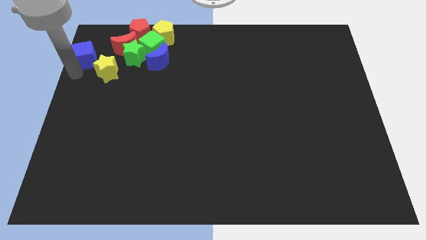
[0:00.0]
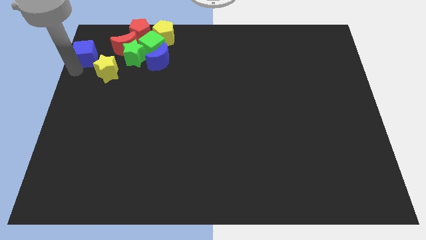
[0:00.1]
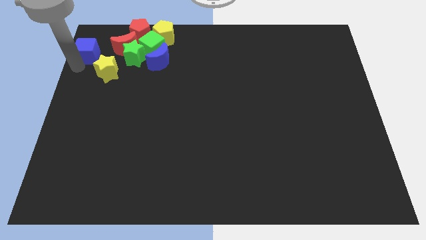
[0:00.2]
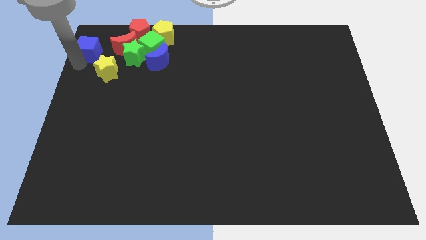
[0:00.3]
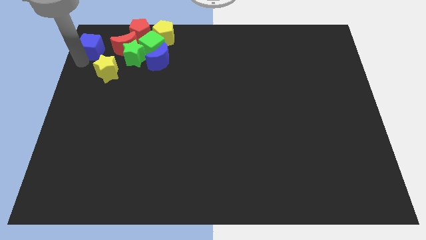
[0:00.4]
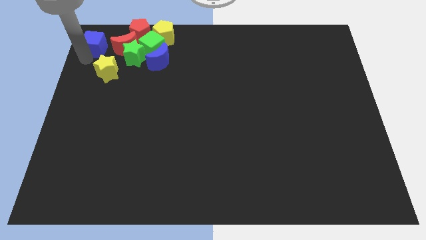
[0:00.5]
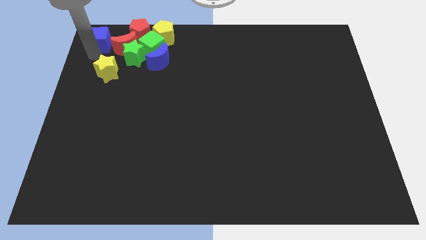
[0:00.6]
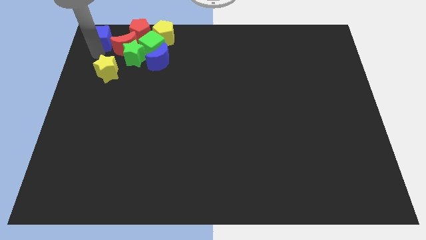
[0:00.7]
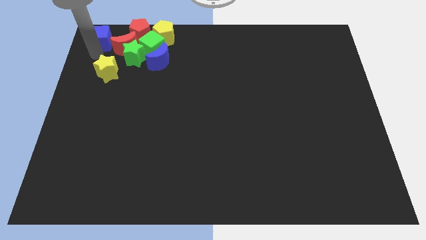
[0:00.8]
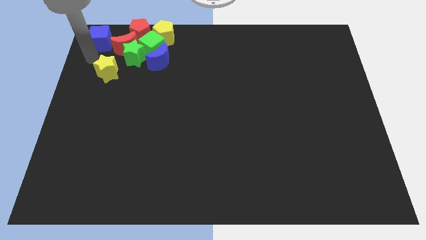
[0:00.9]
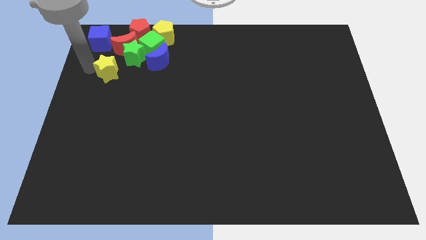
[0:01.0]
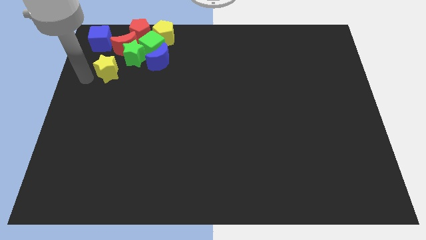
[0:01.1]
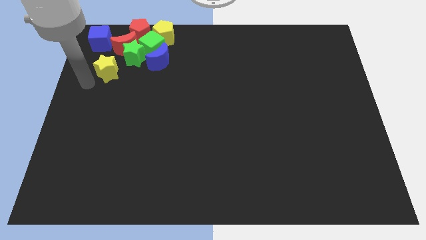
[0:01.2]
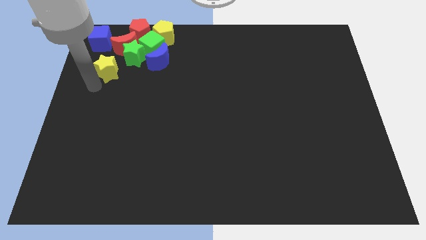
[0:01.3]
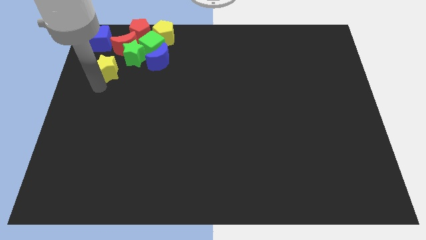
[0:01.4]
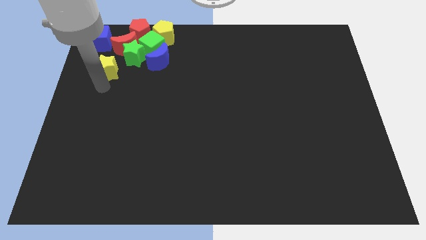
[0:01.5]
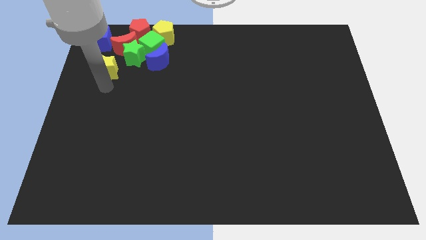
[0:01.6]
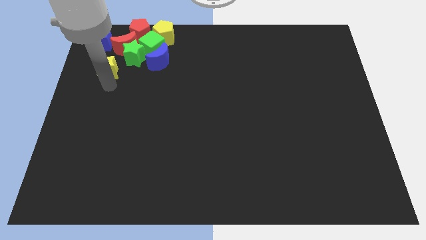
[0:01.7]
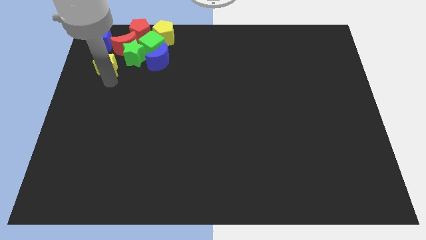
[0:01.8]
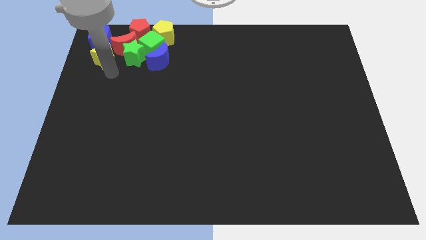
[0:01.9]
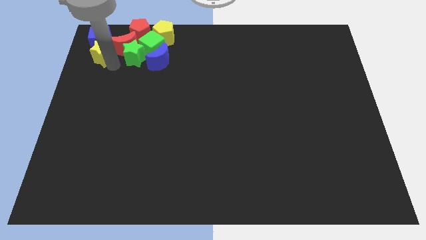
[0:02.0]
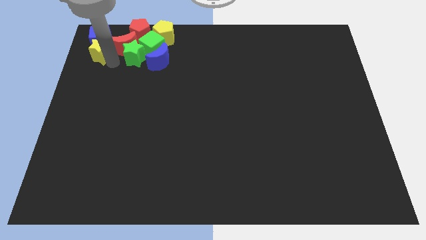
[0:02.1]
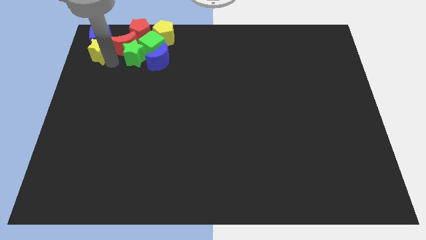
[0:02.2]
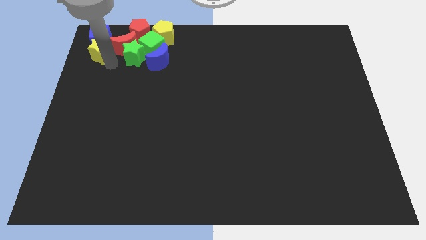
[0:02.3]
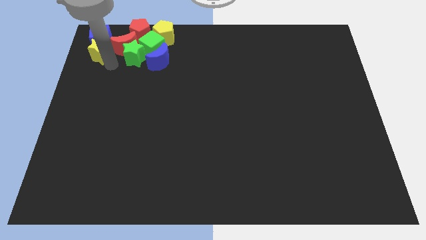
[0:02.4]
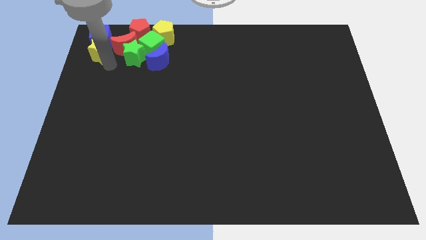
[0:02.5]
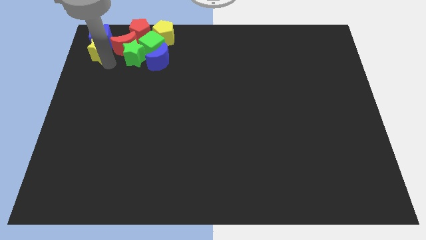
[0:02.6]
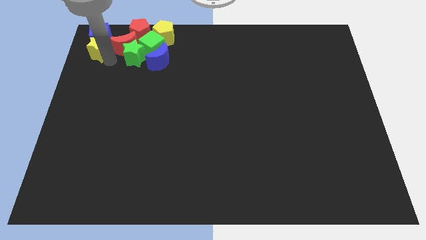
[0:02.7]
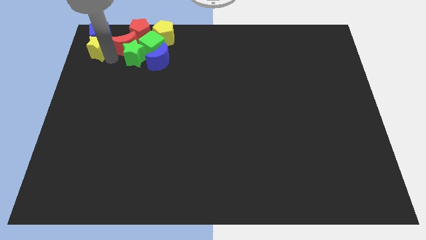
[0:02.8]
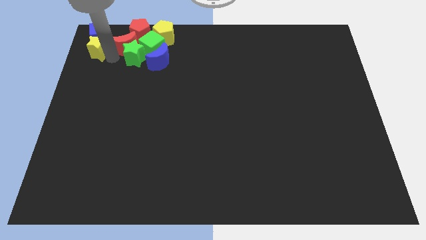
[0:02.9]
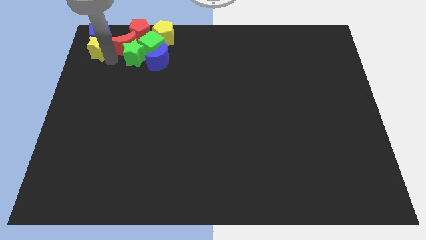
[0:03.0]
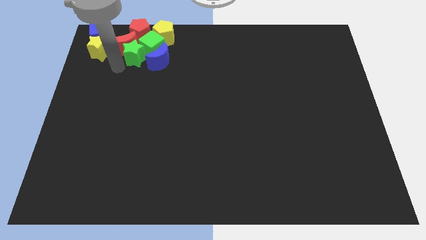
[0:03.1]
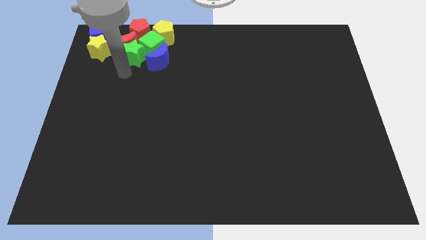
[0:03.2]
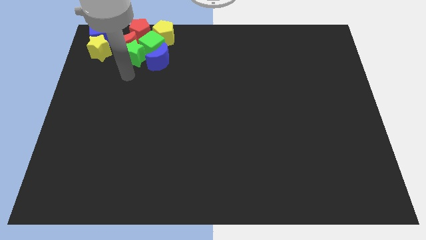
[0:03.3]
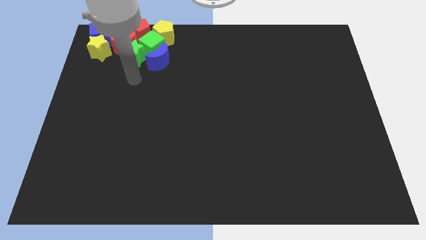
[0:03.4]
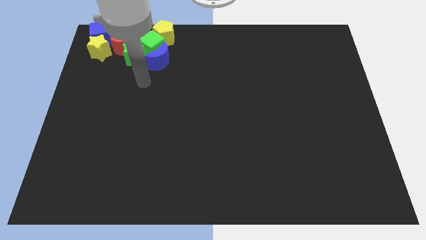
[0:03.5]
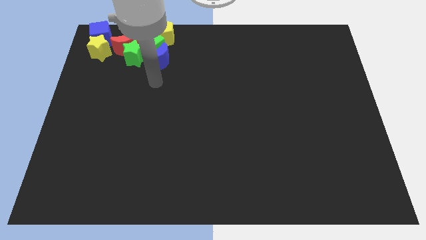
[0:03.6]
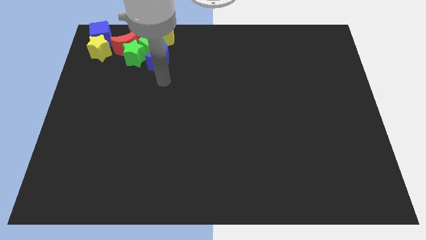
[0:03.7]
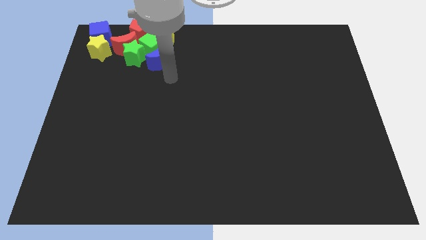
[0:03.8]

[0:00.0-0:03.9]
move the yellow star down to the blue cube

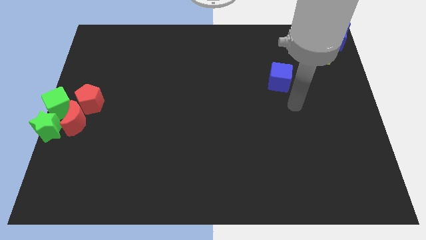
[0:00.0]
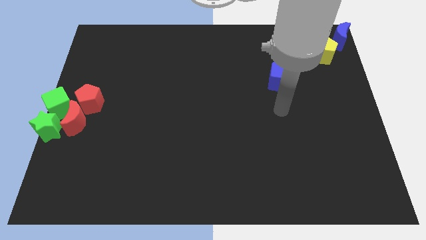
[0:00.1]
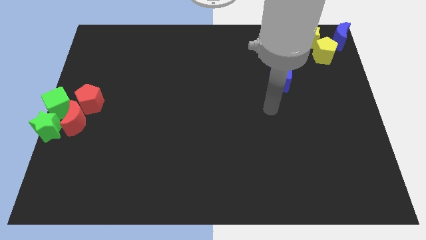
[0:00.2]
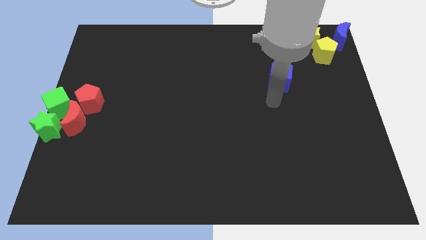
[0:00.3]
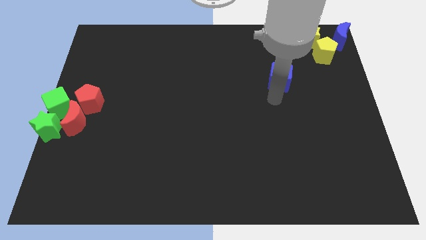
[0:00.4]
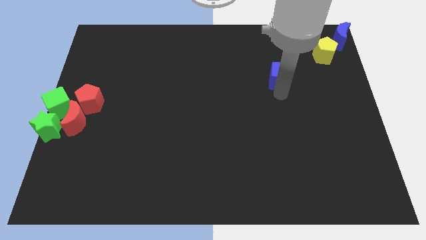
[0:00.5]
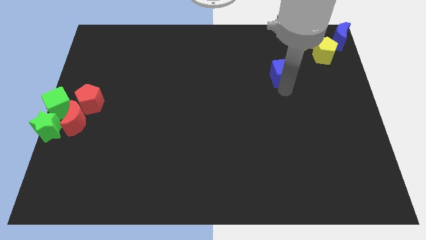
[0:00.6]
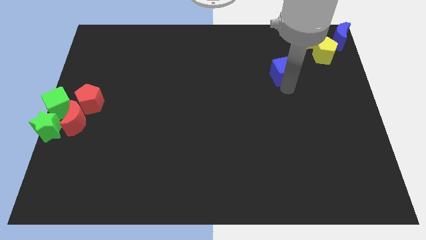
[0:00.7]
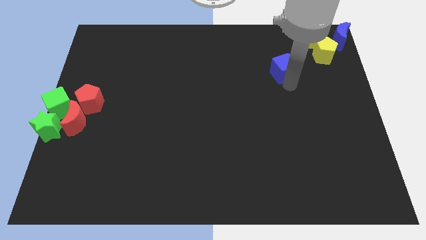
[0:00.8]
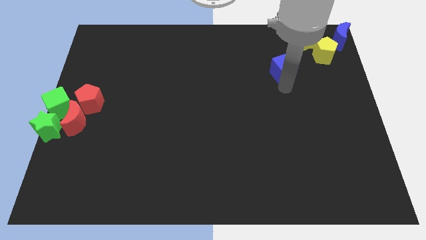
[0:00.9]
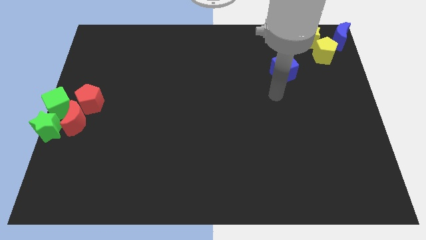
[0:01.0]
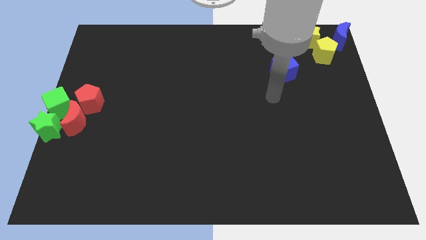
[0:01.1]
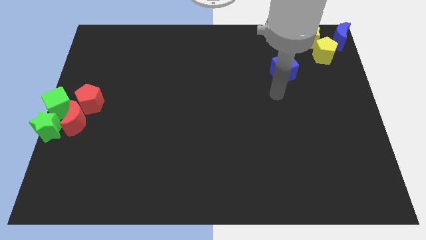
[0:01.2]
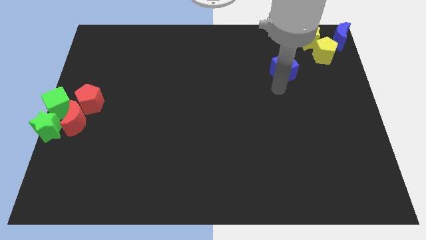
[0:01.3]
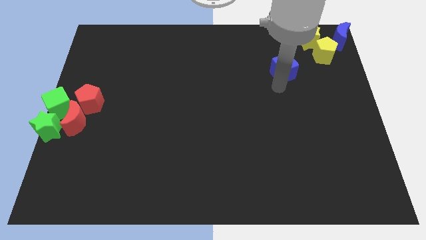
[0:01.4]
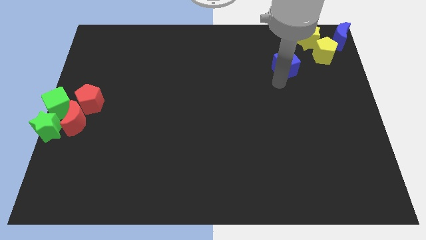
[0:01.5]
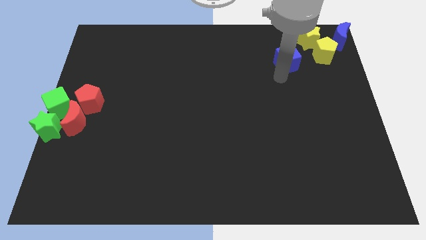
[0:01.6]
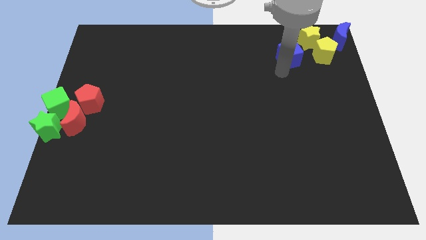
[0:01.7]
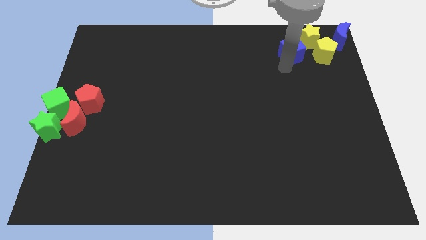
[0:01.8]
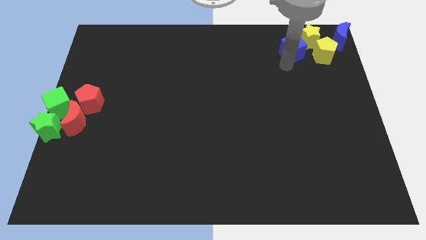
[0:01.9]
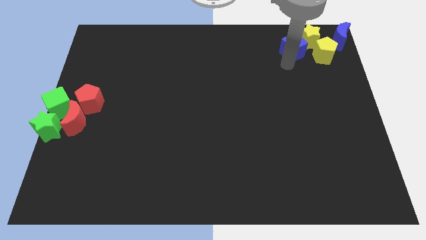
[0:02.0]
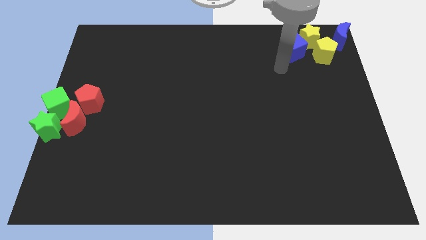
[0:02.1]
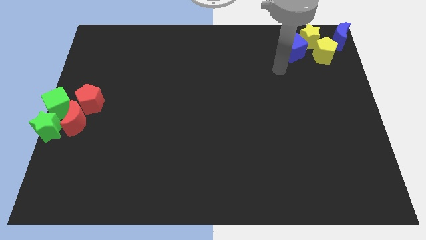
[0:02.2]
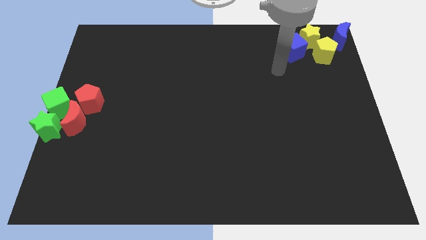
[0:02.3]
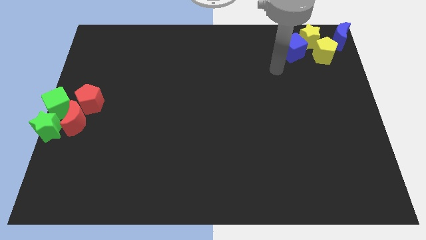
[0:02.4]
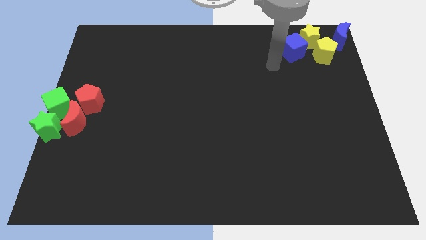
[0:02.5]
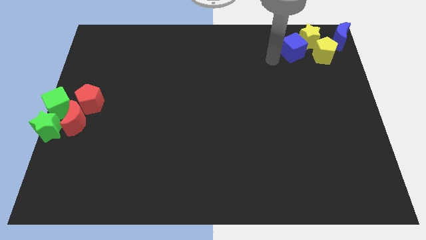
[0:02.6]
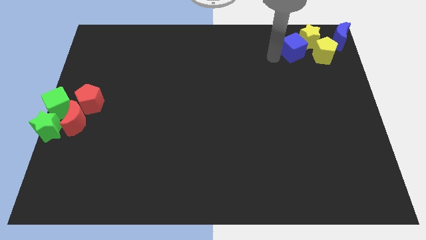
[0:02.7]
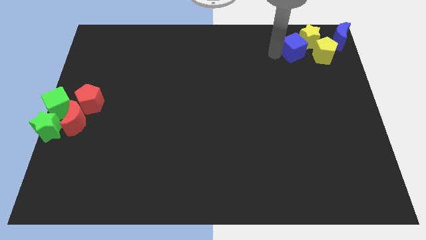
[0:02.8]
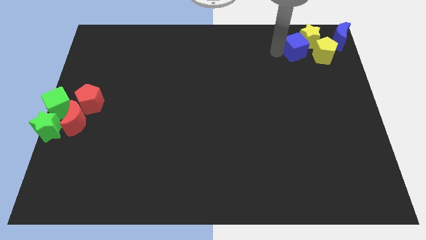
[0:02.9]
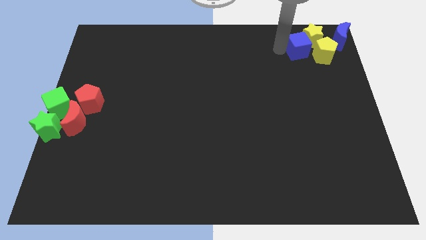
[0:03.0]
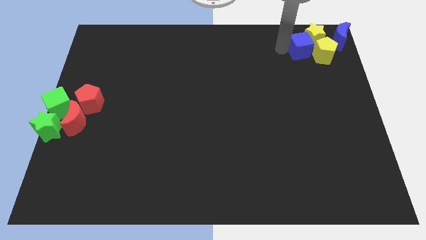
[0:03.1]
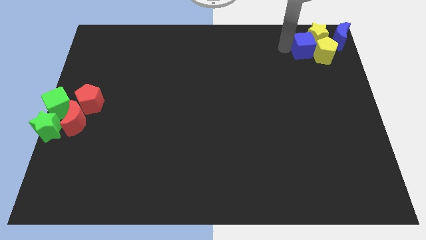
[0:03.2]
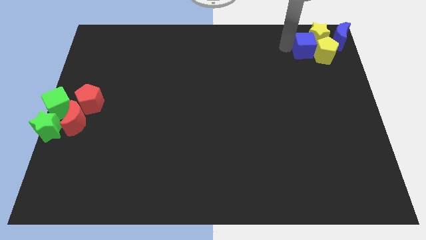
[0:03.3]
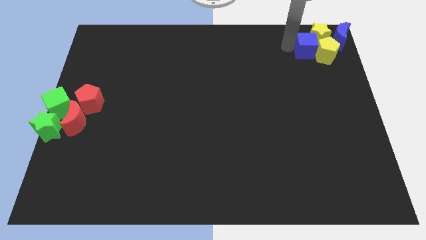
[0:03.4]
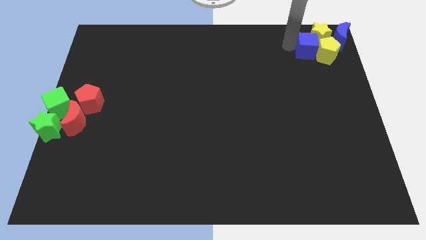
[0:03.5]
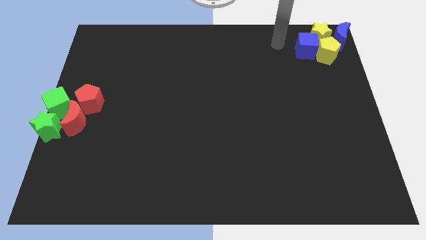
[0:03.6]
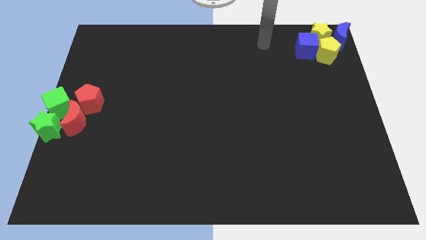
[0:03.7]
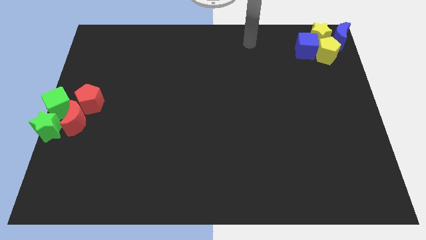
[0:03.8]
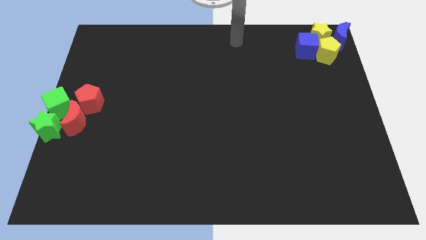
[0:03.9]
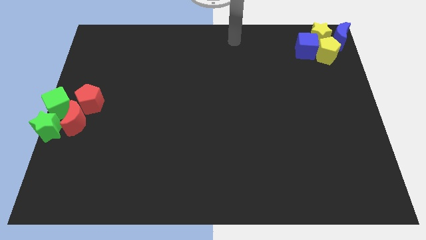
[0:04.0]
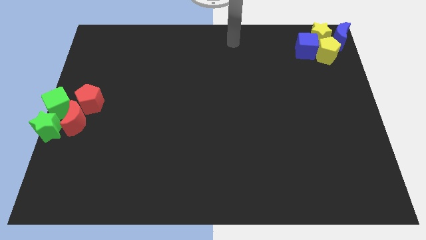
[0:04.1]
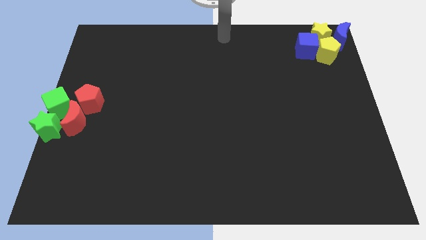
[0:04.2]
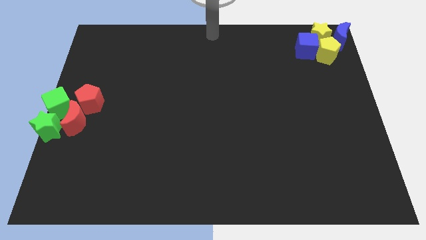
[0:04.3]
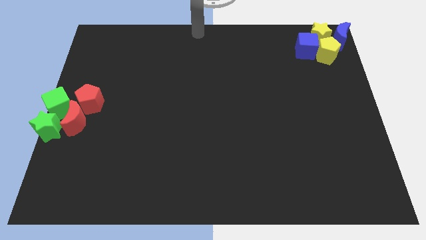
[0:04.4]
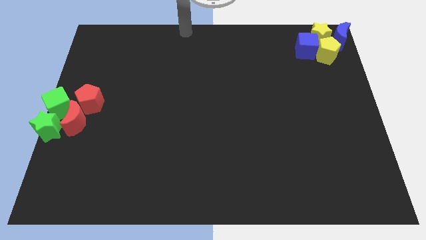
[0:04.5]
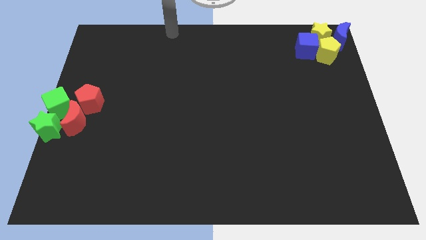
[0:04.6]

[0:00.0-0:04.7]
push the blue cube to the left side of the yellow pentagon

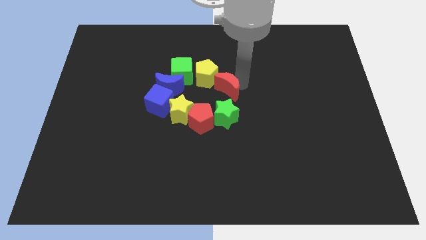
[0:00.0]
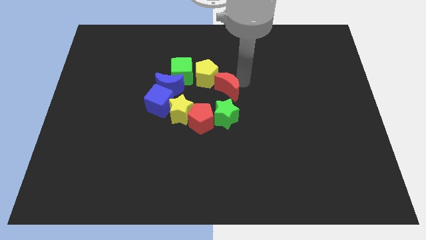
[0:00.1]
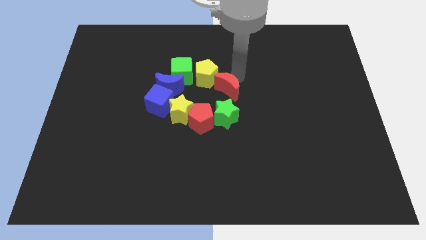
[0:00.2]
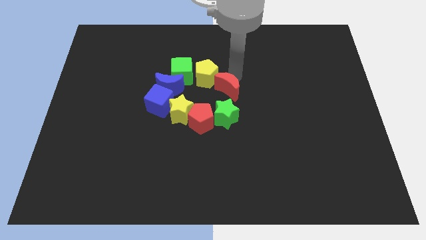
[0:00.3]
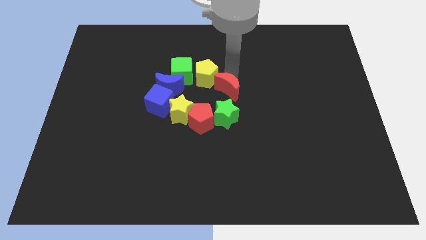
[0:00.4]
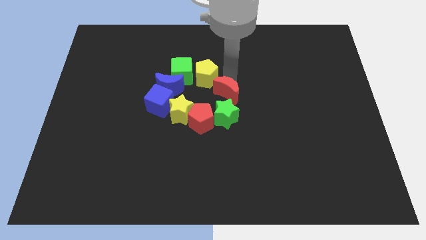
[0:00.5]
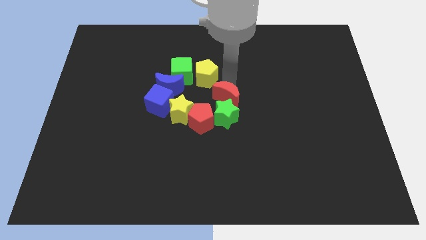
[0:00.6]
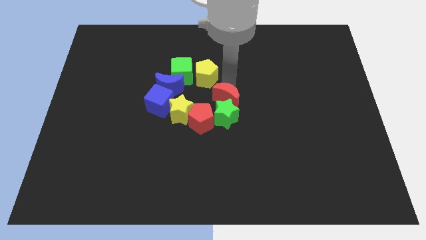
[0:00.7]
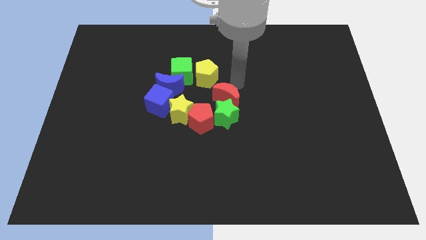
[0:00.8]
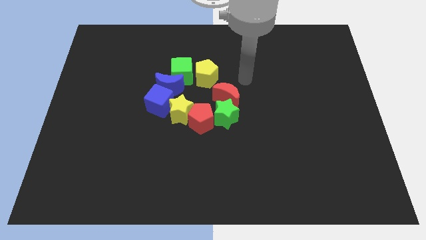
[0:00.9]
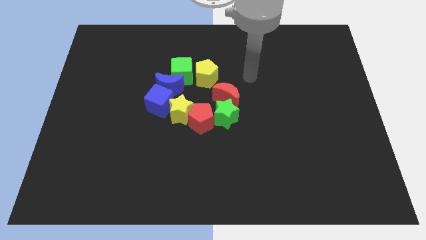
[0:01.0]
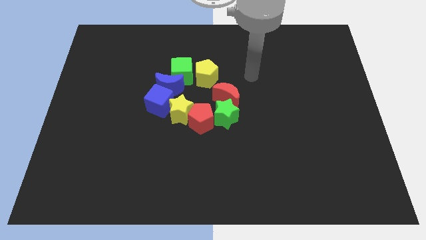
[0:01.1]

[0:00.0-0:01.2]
move the red crescent to the top of the green star
